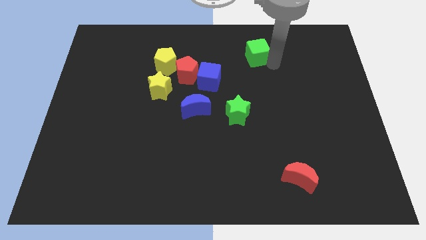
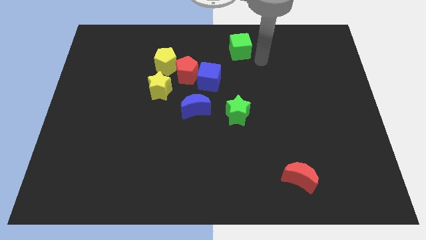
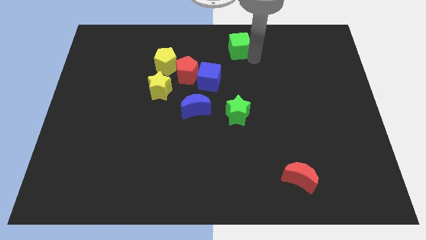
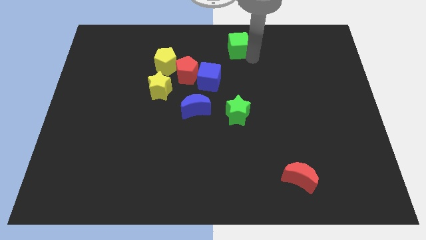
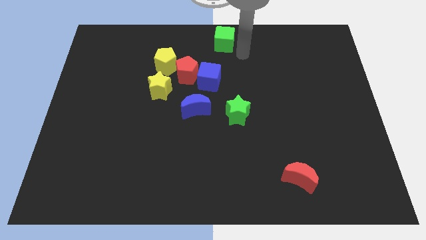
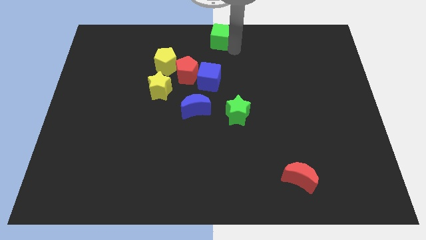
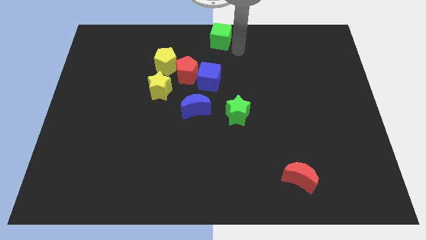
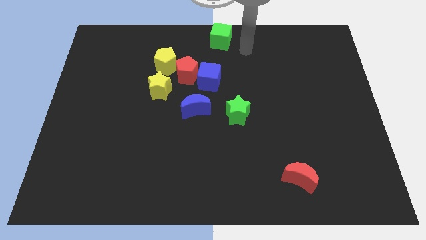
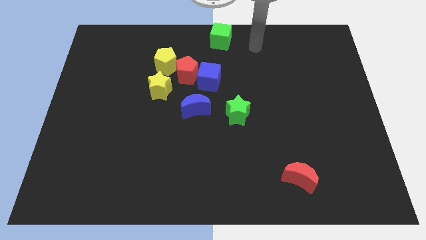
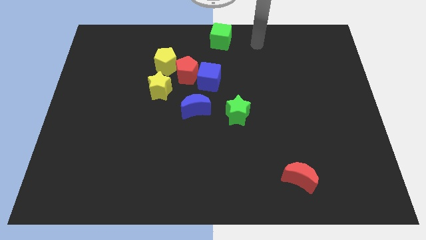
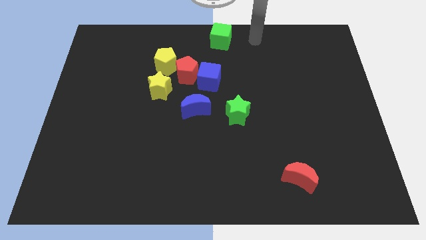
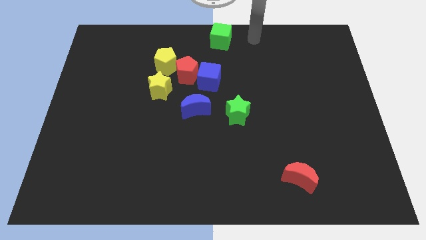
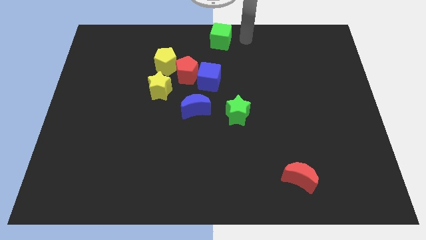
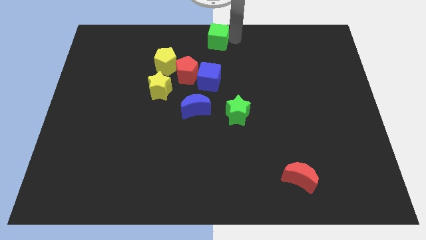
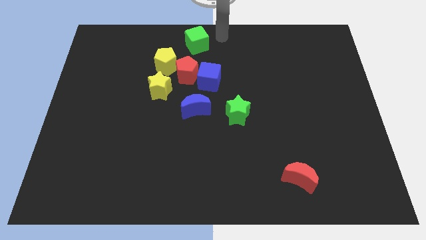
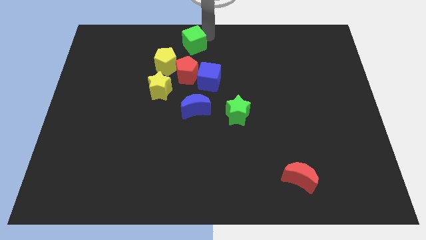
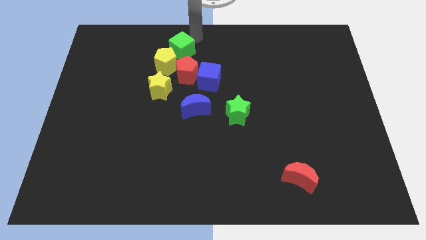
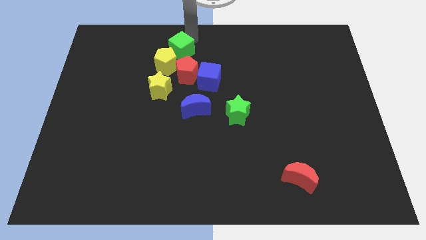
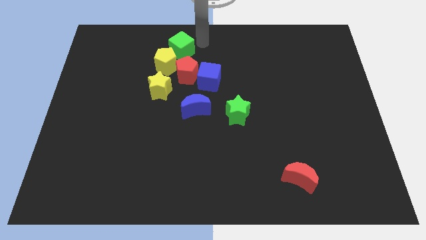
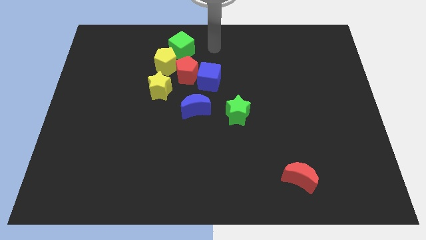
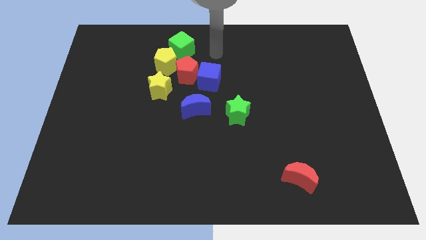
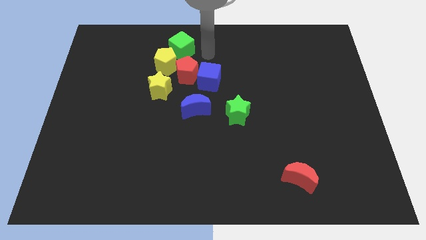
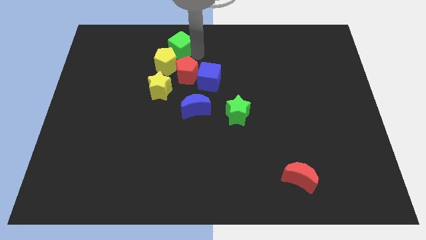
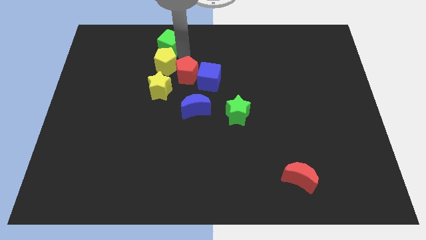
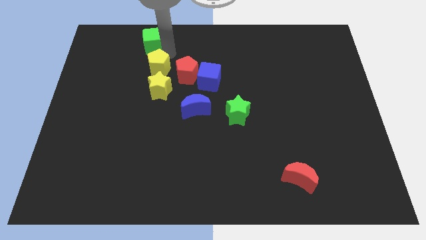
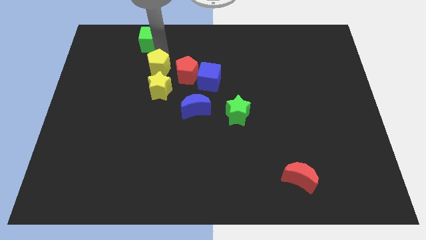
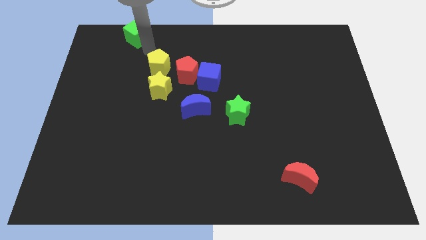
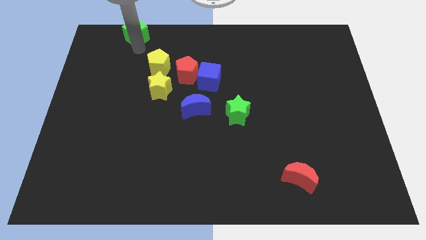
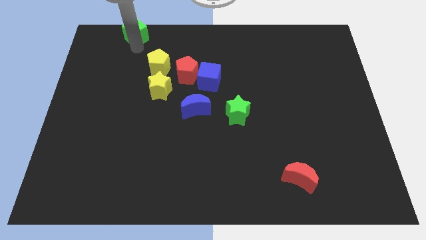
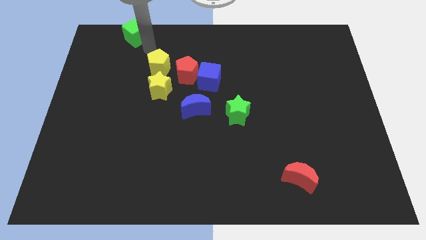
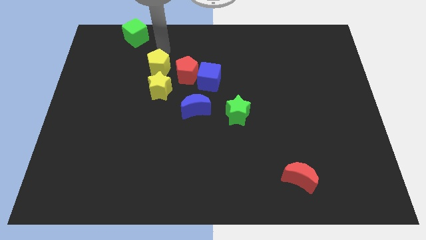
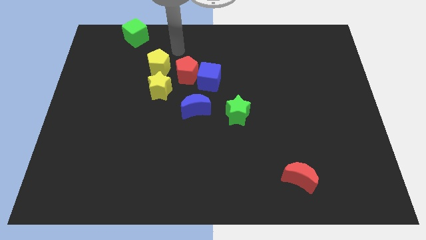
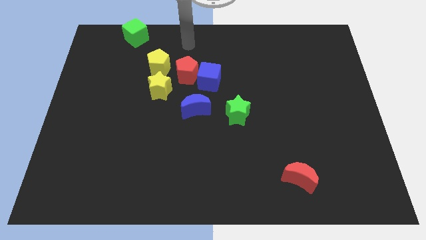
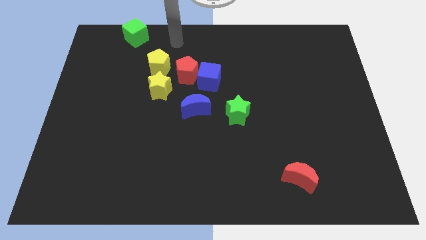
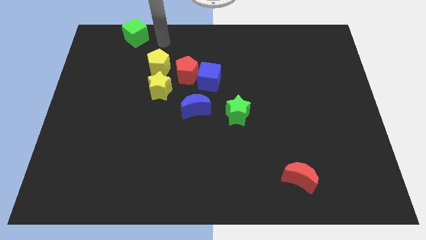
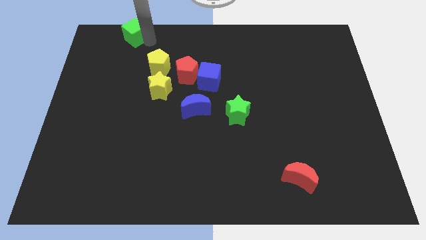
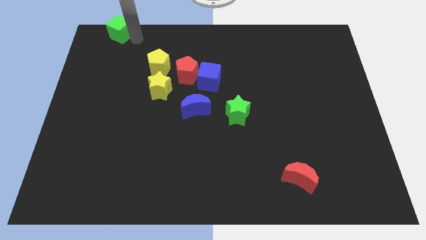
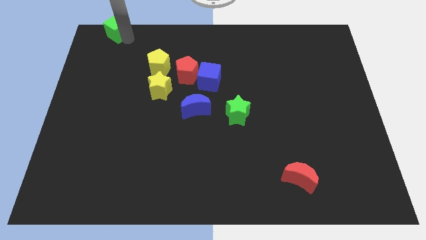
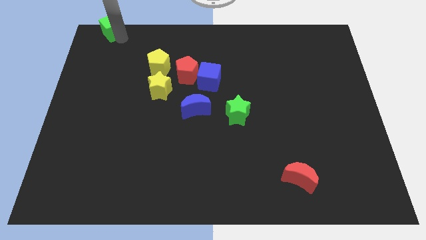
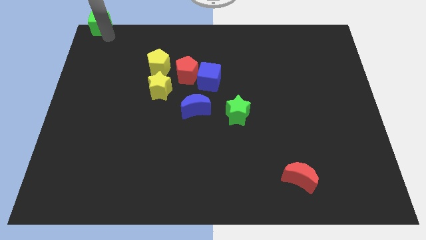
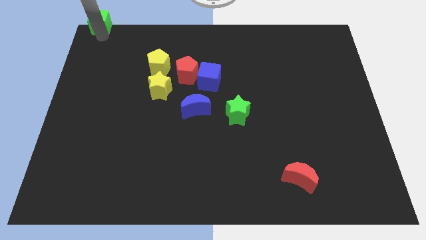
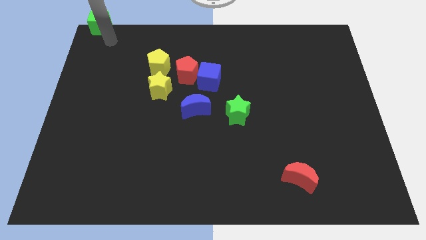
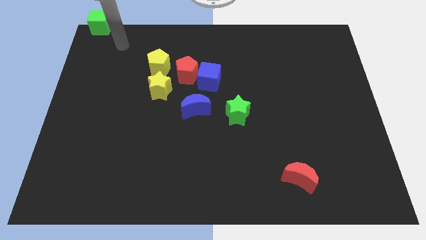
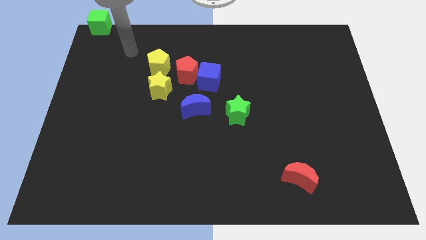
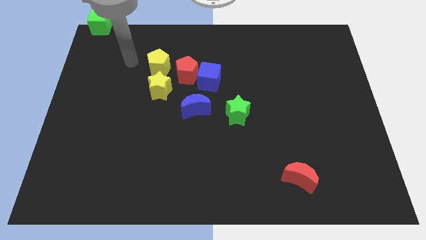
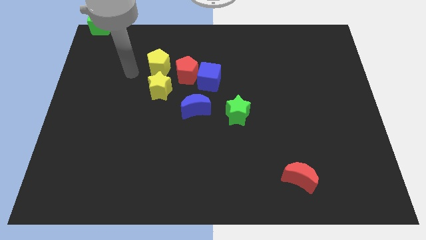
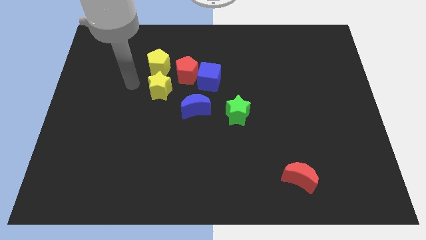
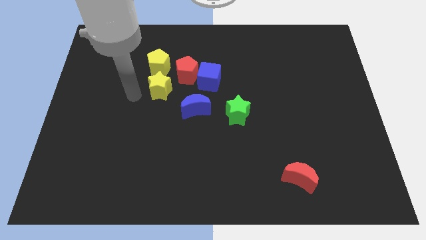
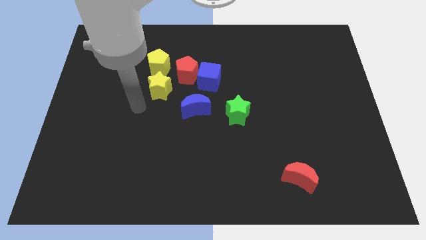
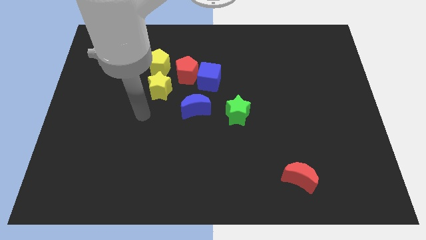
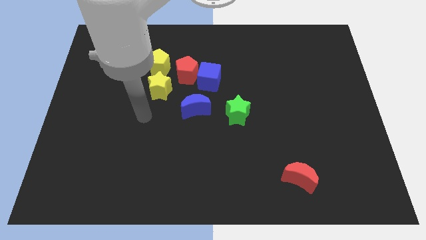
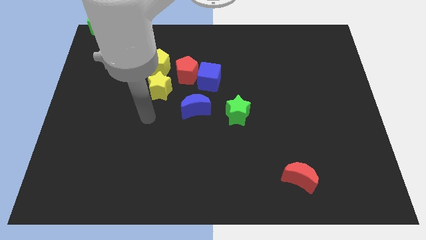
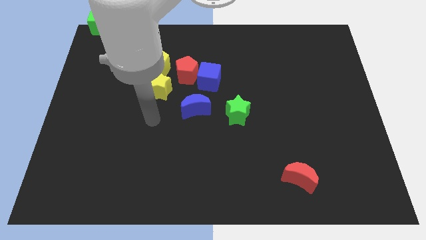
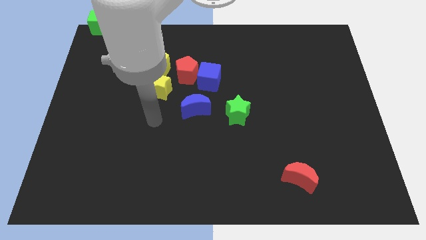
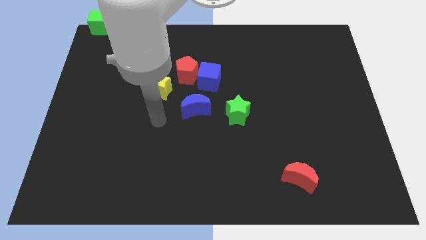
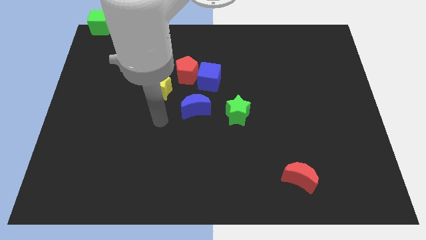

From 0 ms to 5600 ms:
place the green cube at the top left corner of the board

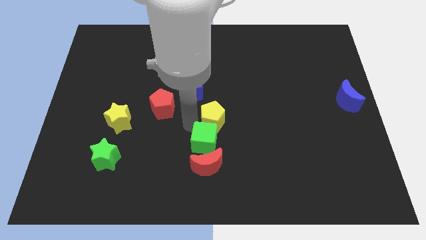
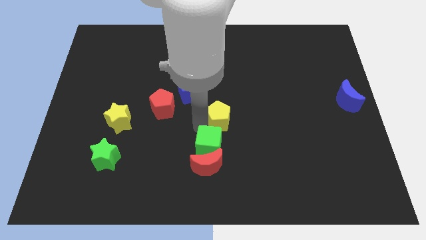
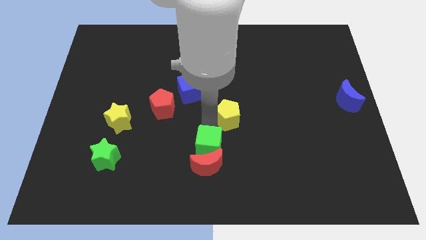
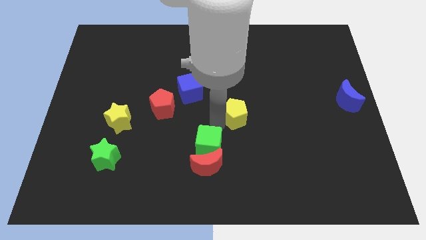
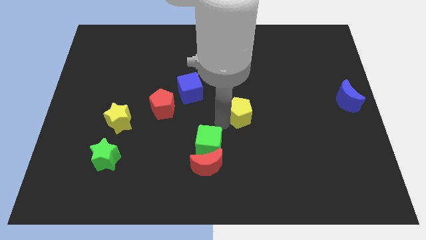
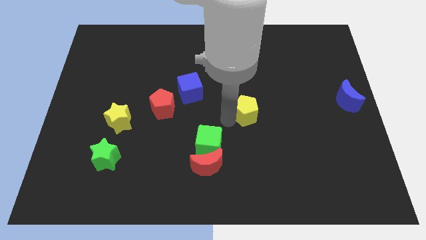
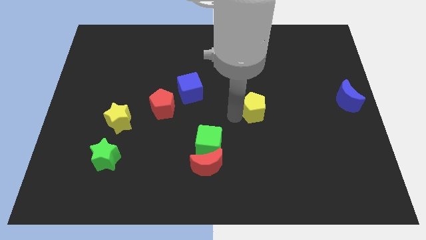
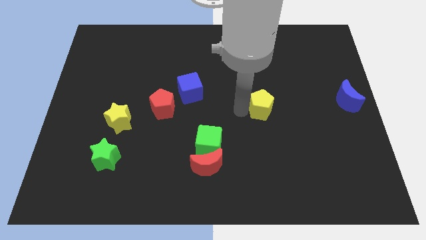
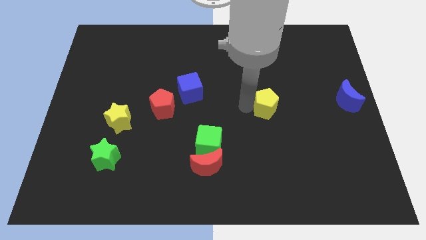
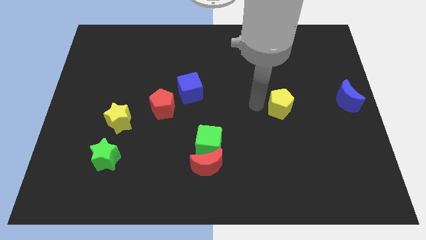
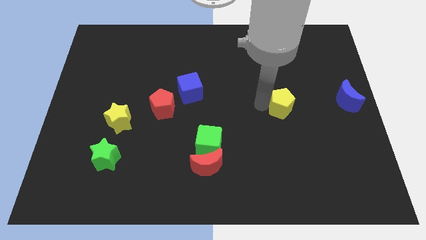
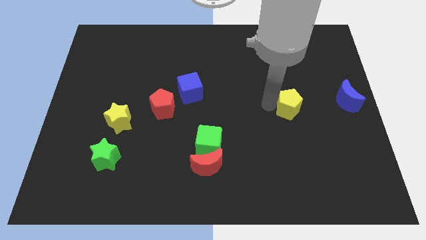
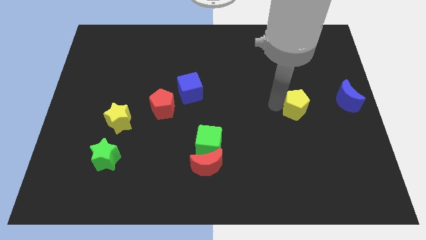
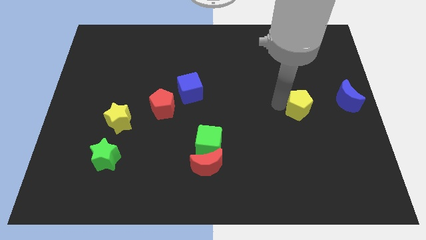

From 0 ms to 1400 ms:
separate the yellow pentagon from the green cube

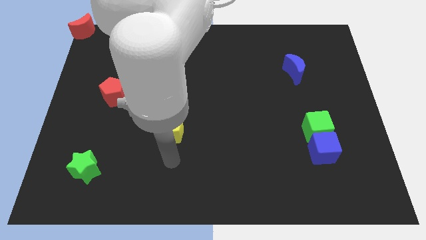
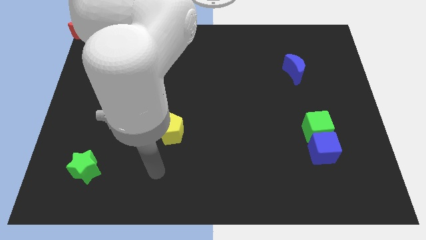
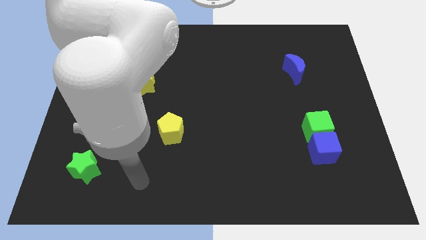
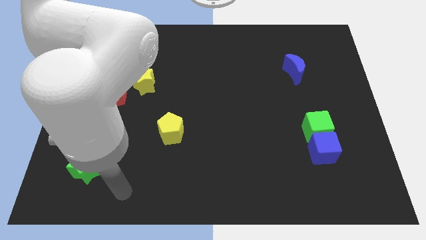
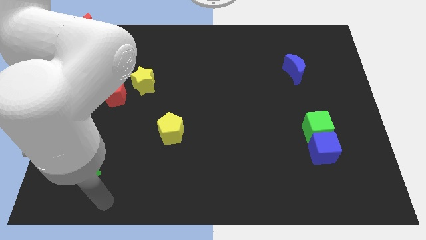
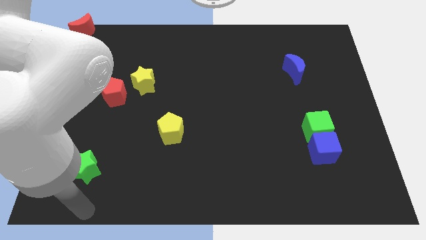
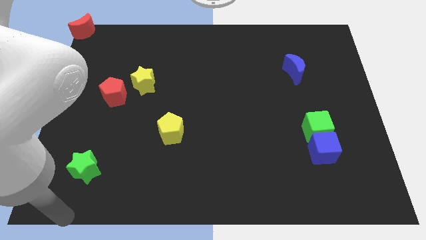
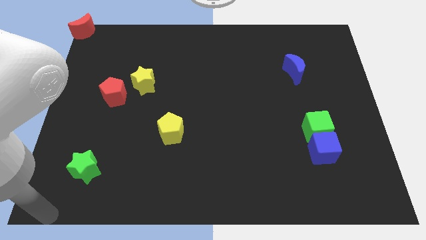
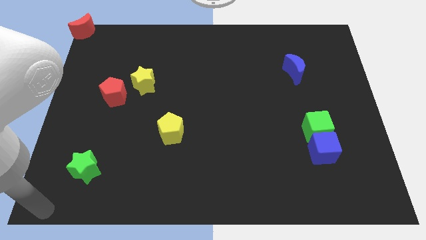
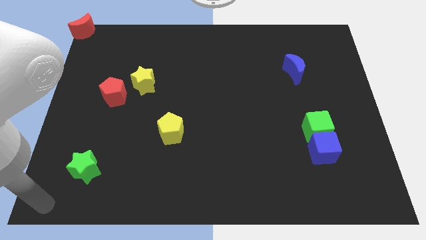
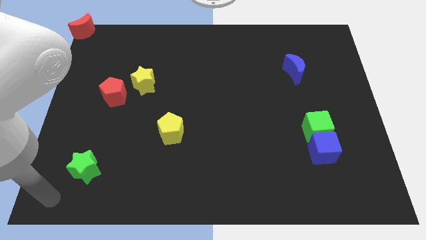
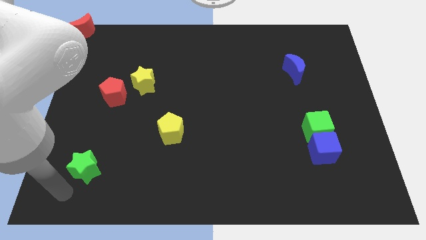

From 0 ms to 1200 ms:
move your arm towards the green star

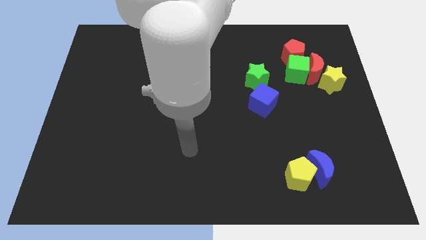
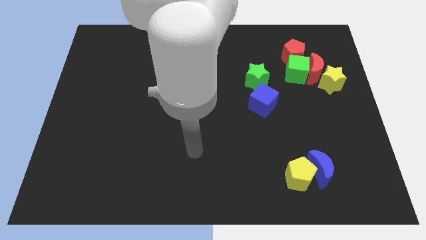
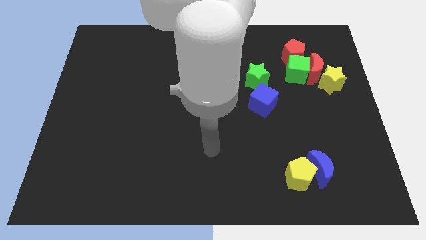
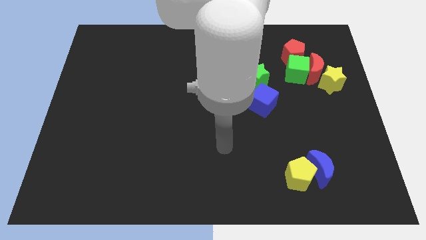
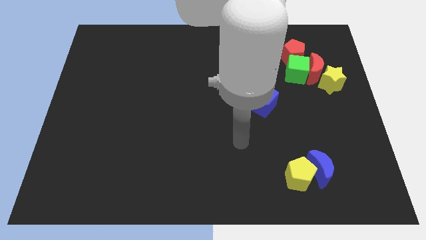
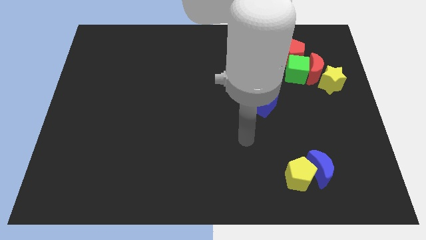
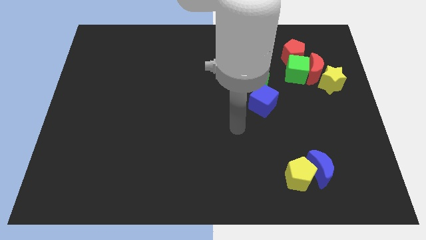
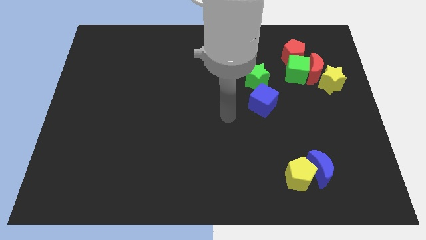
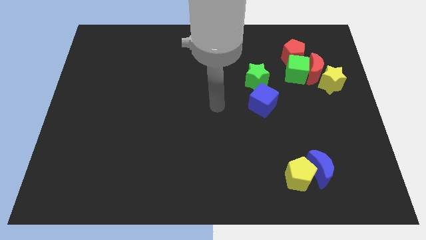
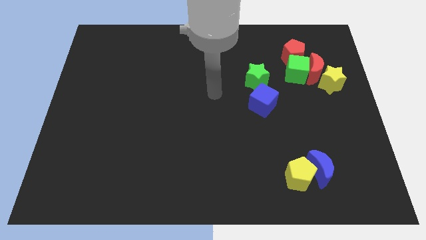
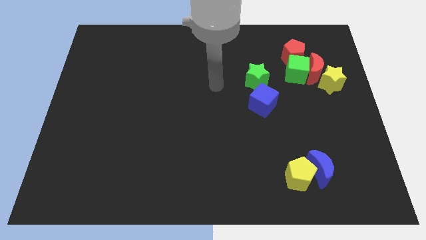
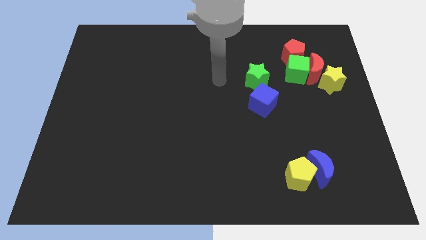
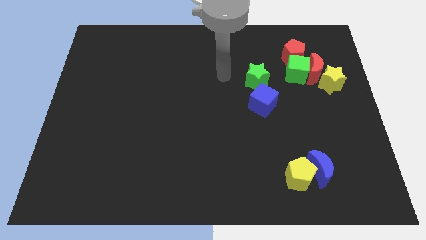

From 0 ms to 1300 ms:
place the arm to the left of the green star
